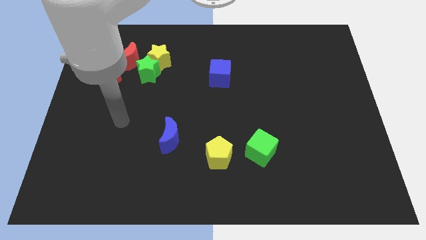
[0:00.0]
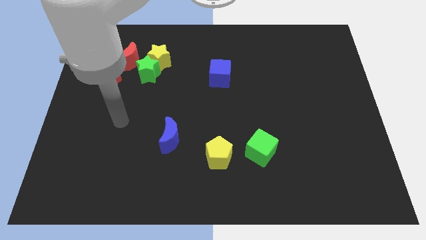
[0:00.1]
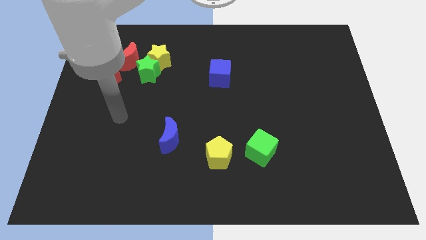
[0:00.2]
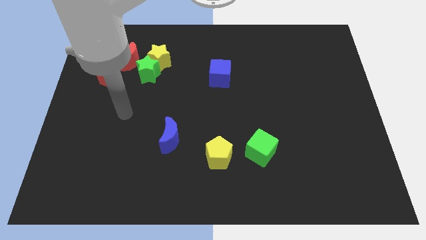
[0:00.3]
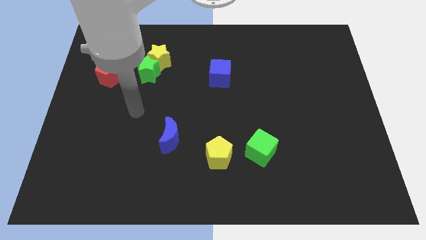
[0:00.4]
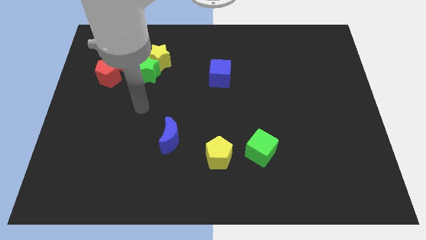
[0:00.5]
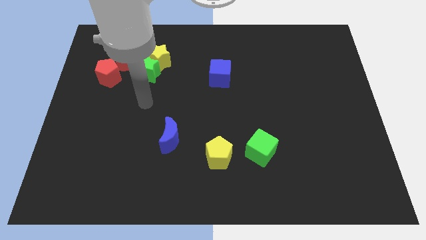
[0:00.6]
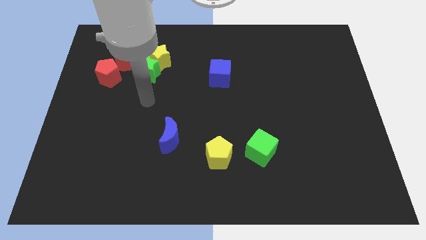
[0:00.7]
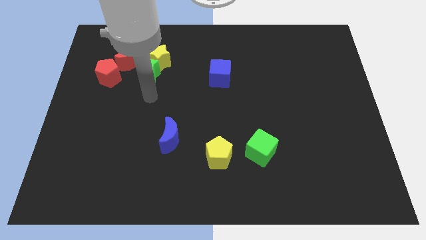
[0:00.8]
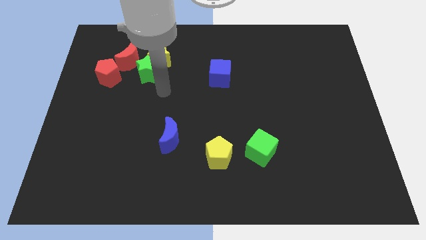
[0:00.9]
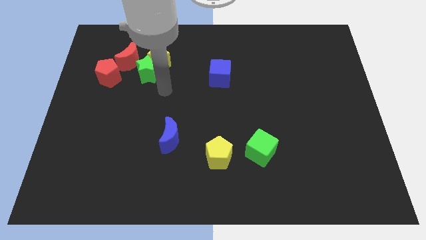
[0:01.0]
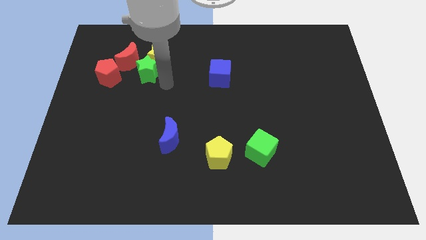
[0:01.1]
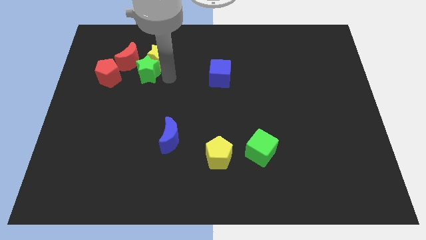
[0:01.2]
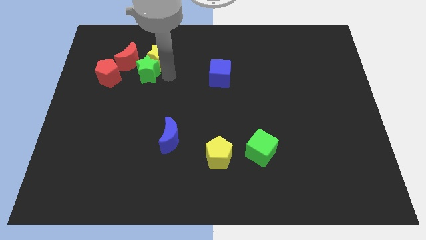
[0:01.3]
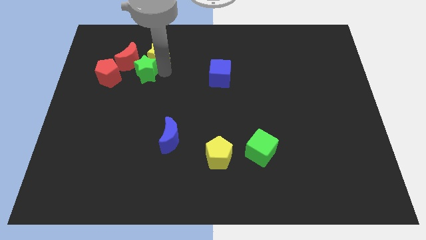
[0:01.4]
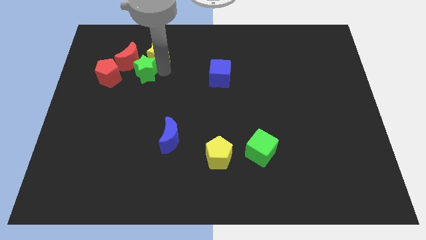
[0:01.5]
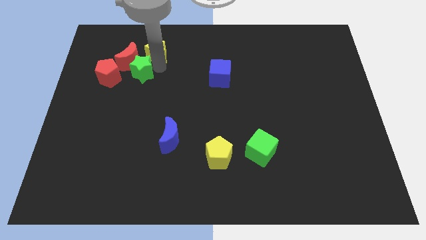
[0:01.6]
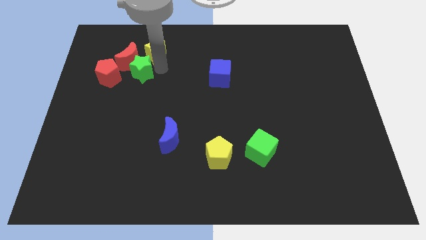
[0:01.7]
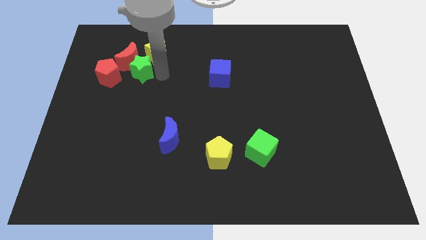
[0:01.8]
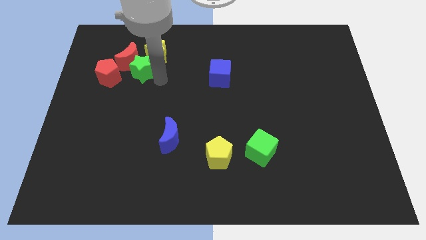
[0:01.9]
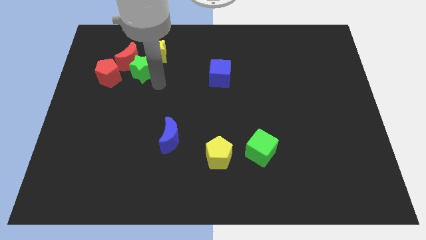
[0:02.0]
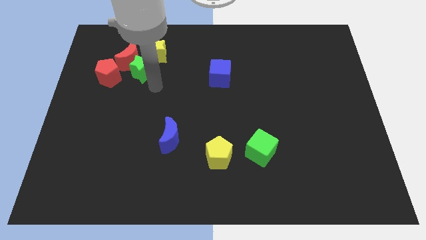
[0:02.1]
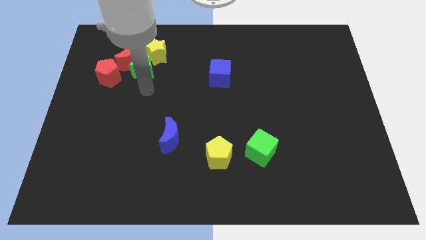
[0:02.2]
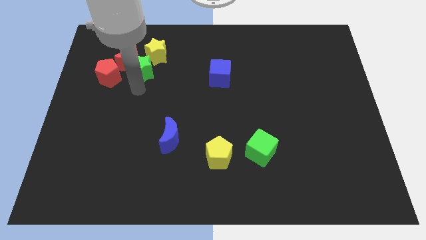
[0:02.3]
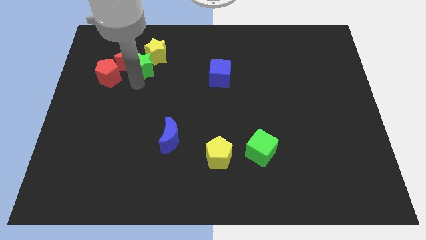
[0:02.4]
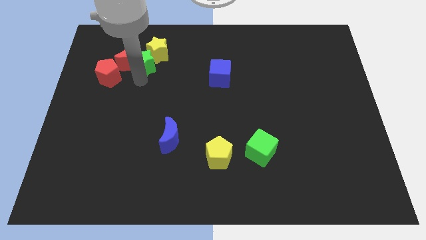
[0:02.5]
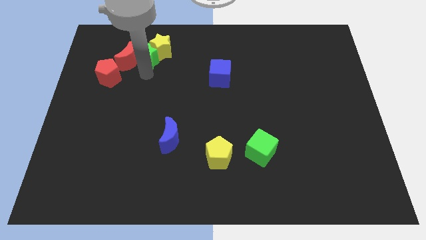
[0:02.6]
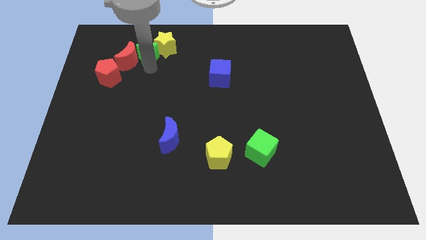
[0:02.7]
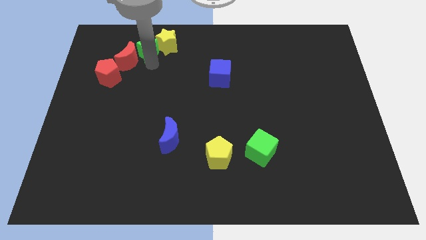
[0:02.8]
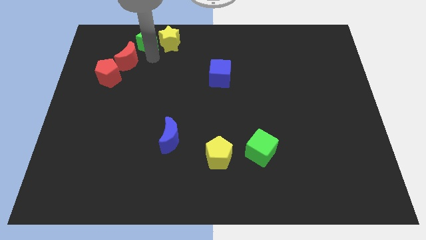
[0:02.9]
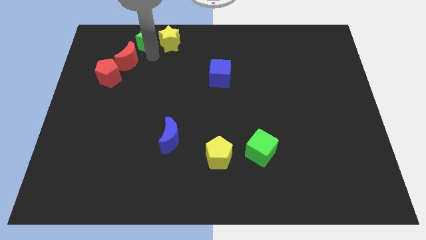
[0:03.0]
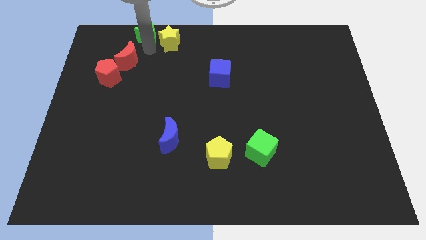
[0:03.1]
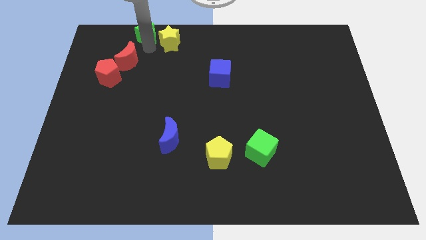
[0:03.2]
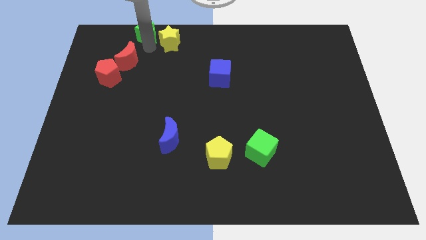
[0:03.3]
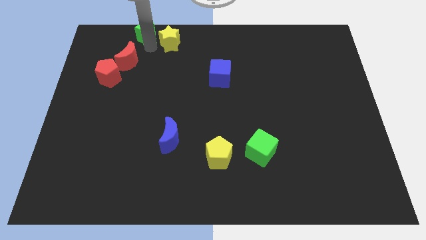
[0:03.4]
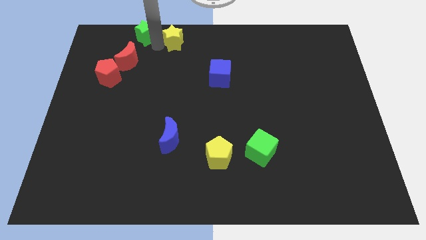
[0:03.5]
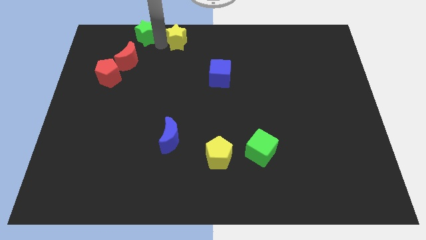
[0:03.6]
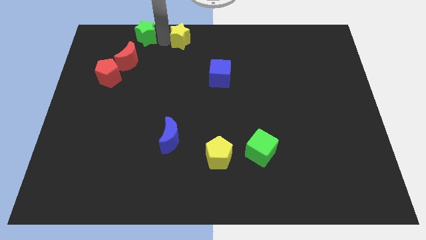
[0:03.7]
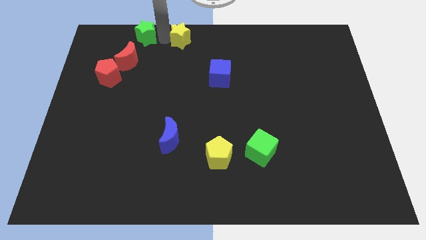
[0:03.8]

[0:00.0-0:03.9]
separate green star and yellow star

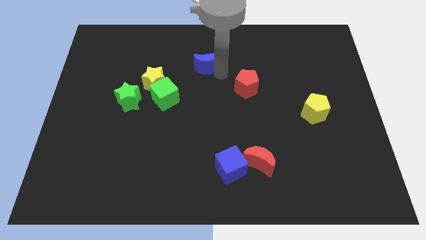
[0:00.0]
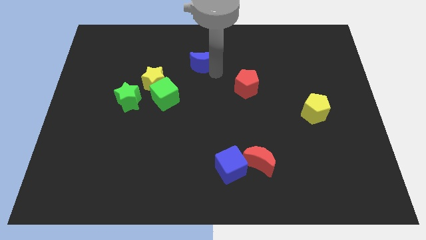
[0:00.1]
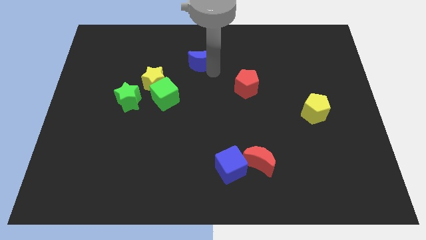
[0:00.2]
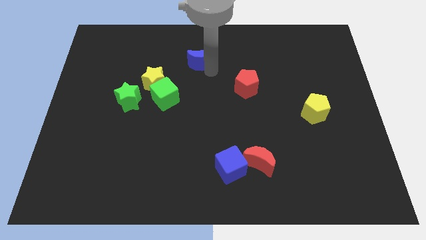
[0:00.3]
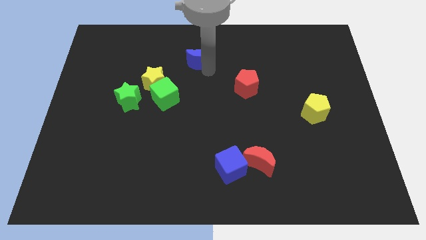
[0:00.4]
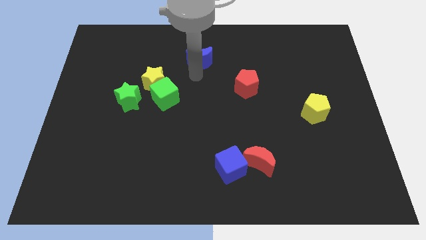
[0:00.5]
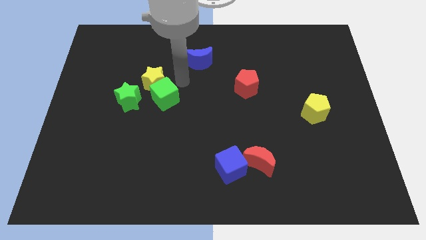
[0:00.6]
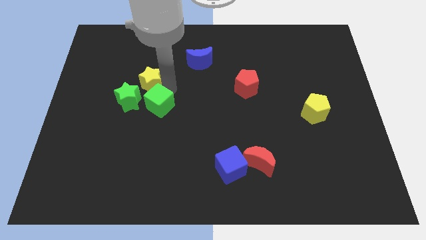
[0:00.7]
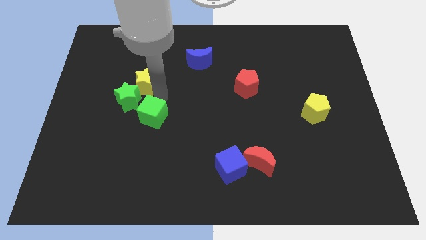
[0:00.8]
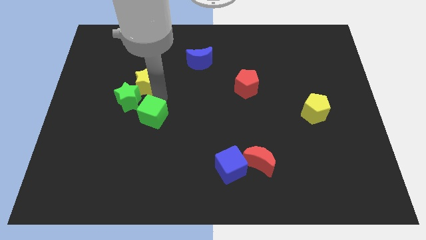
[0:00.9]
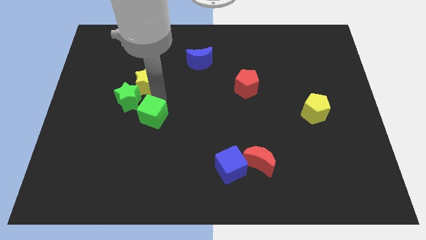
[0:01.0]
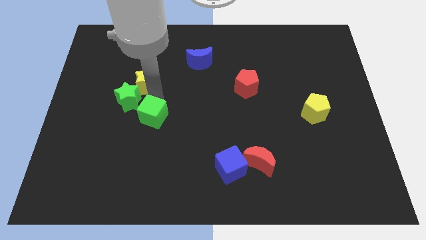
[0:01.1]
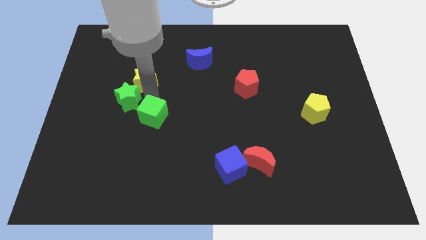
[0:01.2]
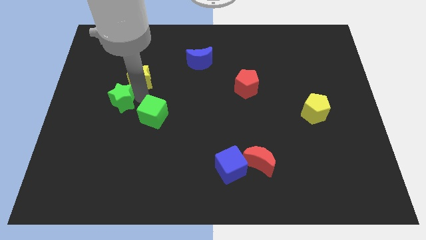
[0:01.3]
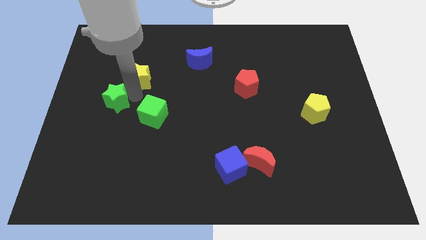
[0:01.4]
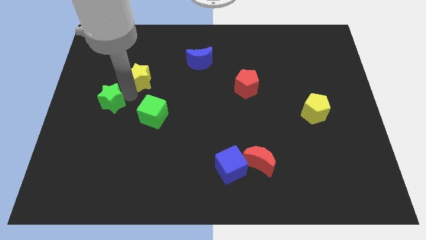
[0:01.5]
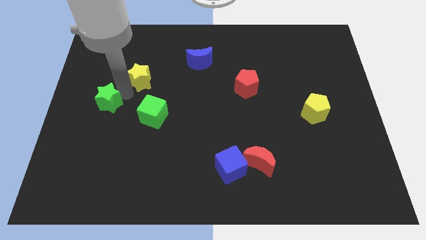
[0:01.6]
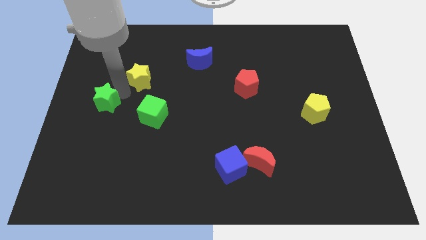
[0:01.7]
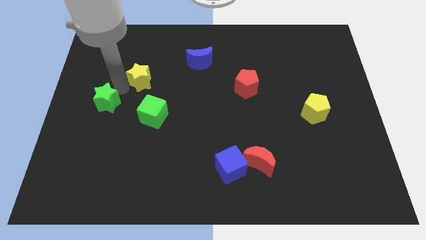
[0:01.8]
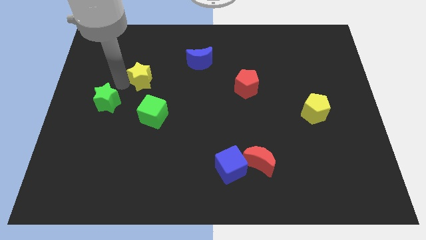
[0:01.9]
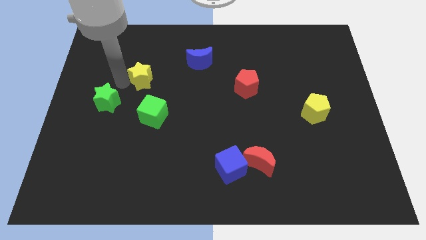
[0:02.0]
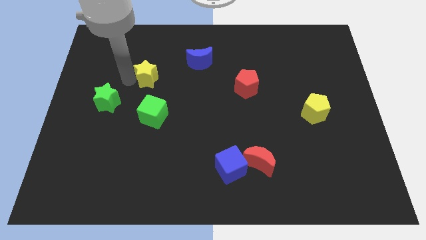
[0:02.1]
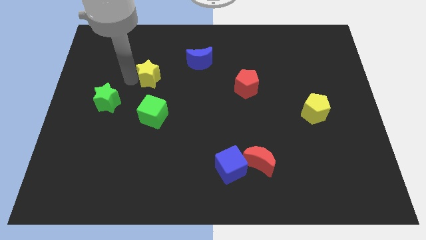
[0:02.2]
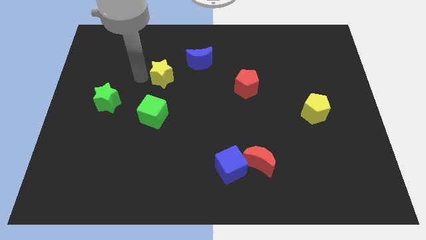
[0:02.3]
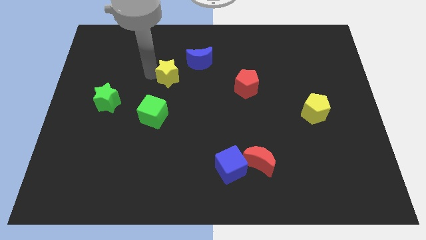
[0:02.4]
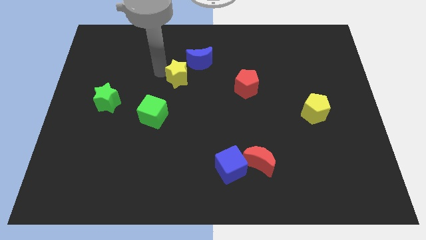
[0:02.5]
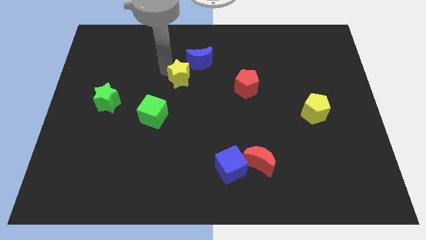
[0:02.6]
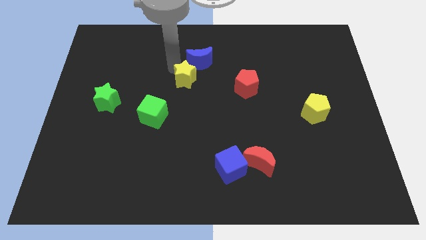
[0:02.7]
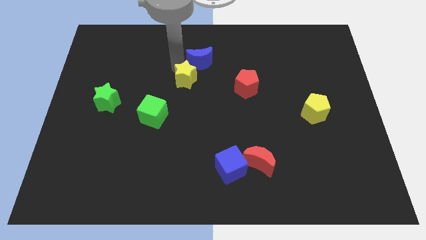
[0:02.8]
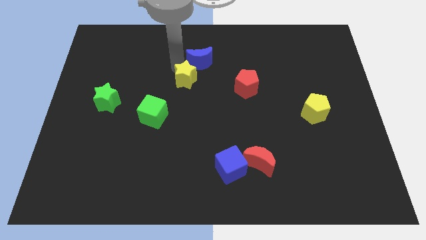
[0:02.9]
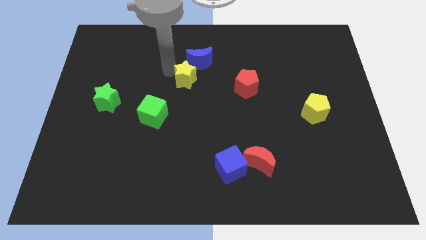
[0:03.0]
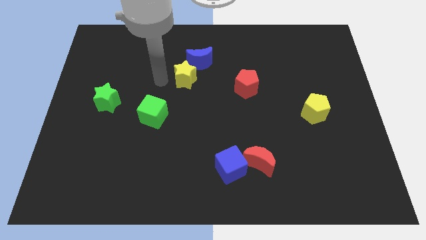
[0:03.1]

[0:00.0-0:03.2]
drag yellow star below blue moon

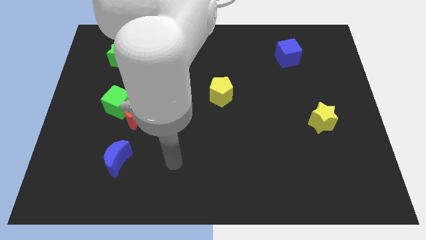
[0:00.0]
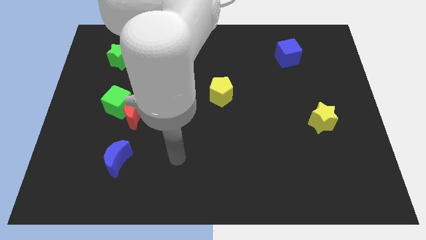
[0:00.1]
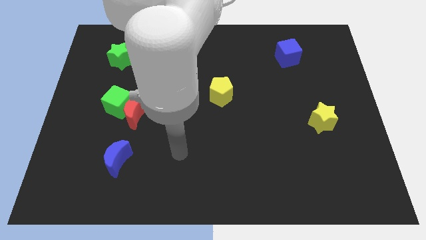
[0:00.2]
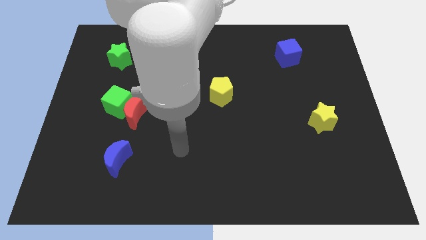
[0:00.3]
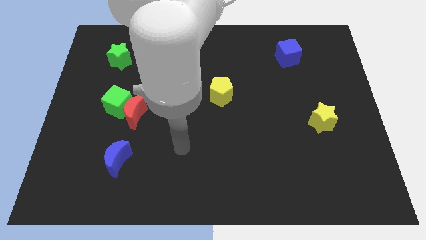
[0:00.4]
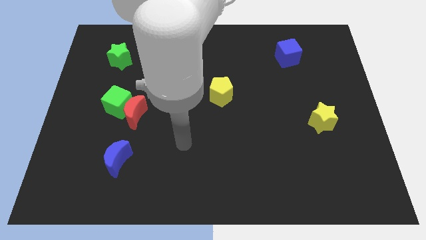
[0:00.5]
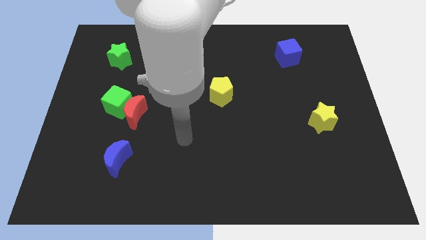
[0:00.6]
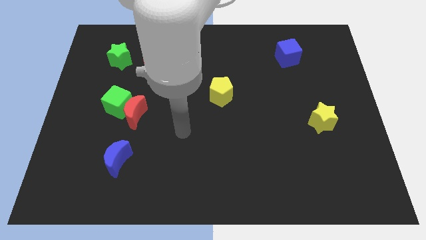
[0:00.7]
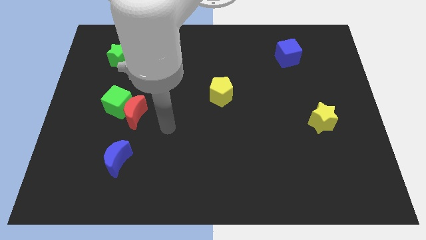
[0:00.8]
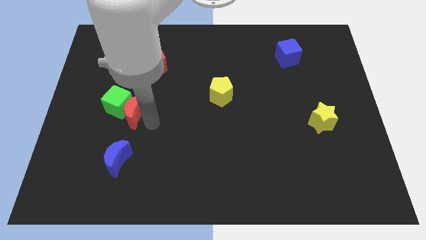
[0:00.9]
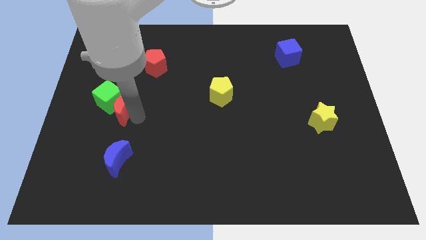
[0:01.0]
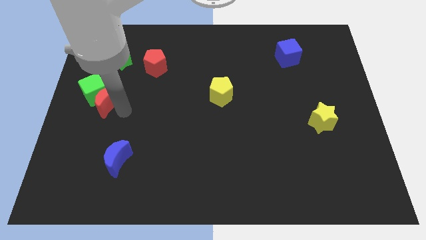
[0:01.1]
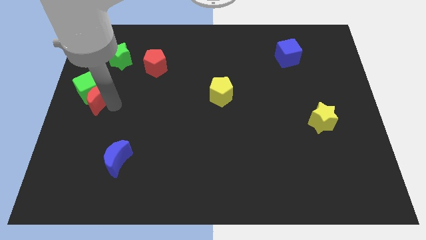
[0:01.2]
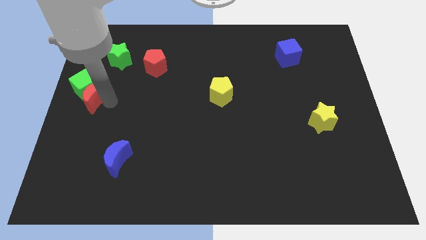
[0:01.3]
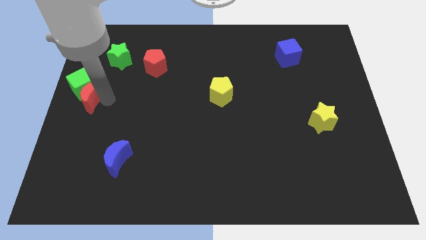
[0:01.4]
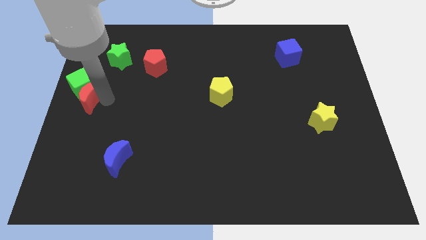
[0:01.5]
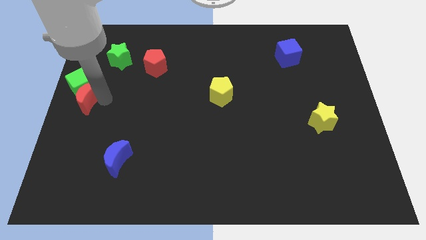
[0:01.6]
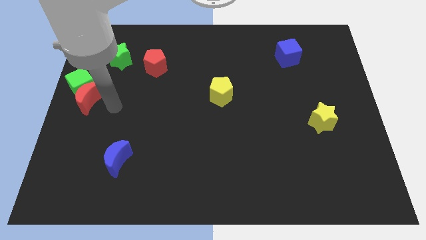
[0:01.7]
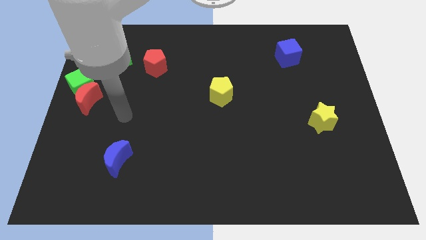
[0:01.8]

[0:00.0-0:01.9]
push the red moon along with green cube towards center left
